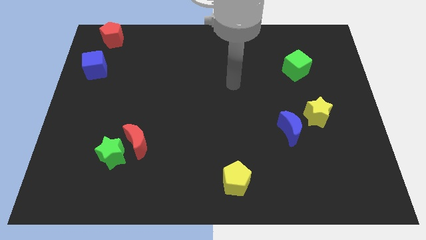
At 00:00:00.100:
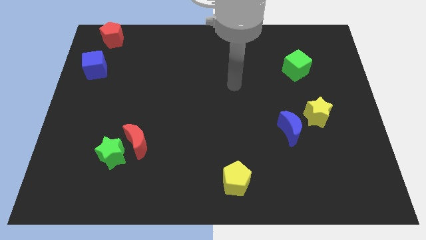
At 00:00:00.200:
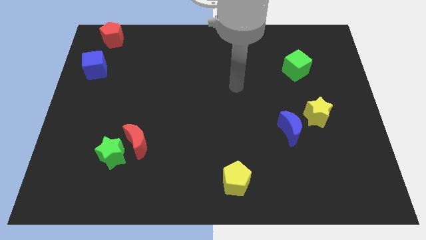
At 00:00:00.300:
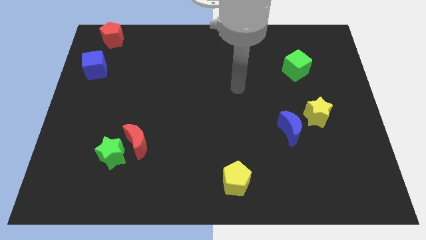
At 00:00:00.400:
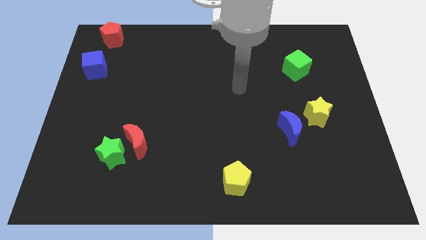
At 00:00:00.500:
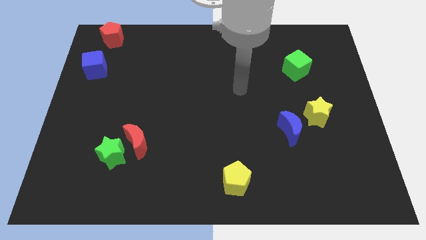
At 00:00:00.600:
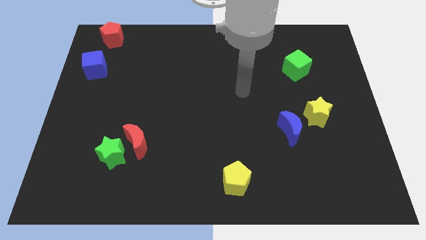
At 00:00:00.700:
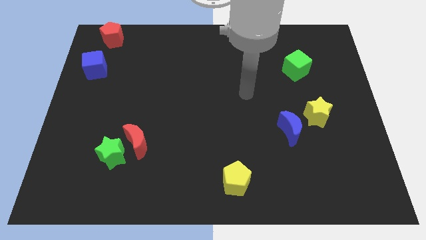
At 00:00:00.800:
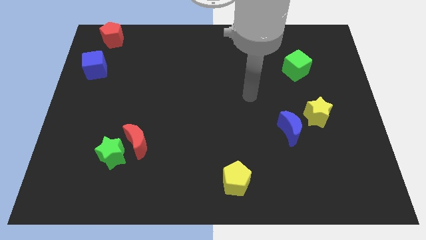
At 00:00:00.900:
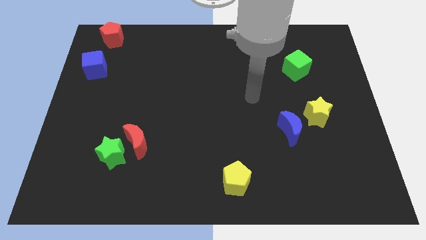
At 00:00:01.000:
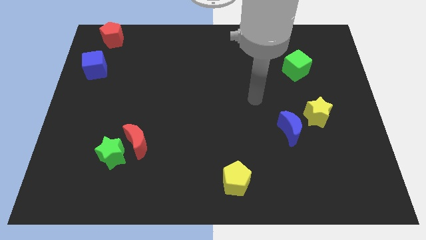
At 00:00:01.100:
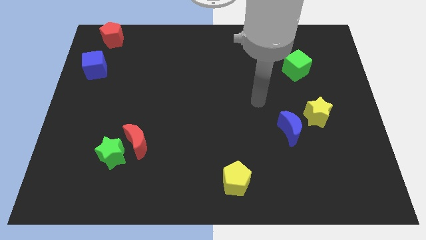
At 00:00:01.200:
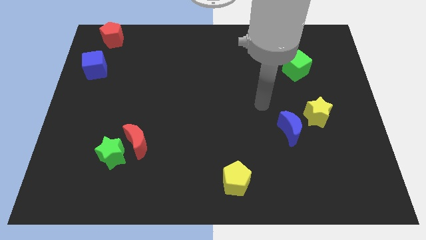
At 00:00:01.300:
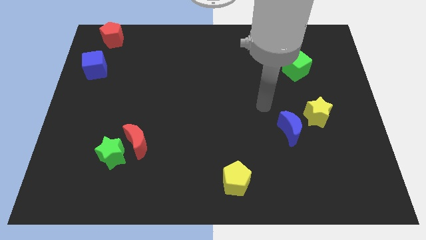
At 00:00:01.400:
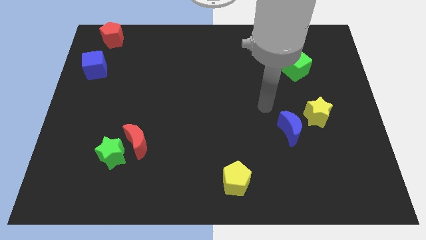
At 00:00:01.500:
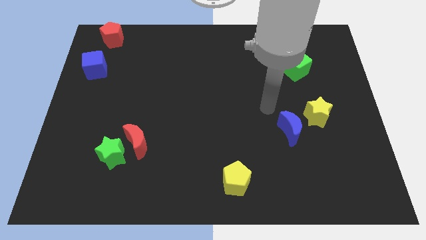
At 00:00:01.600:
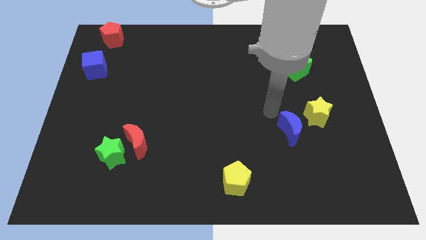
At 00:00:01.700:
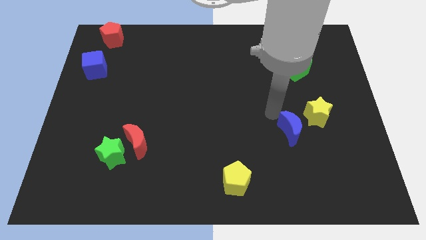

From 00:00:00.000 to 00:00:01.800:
move your arm to the top of the blue crescent

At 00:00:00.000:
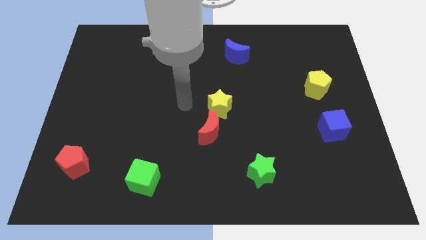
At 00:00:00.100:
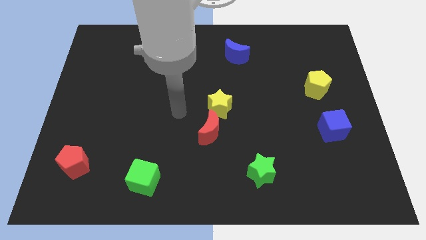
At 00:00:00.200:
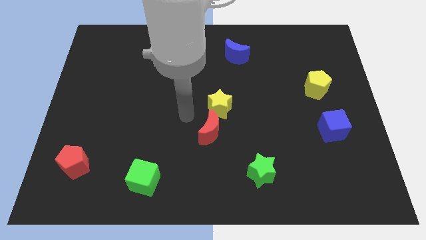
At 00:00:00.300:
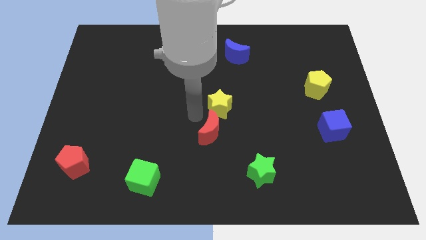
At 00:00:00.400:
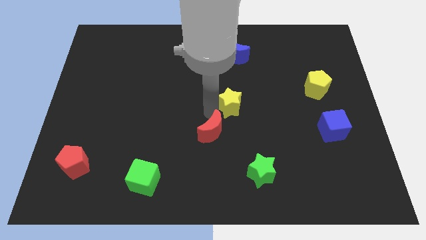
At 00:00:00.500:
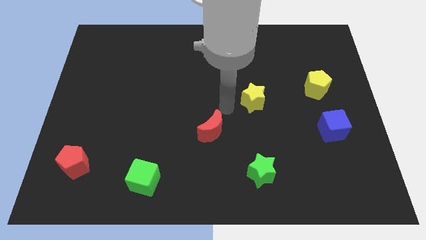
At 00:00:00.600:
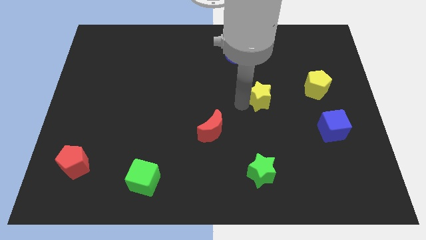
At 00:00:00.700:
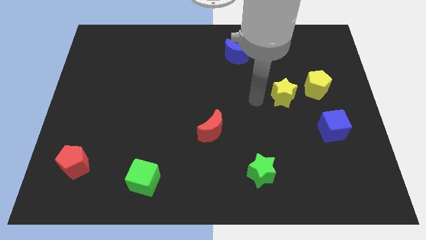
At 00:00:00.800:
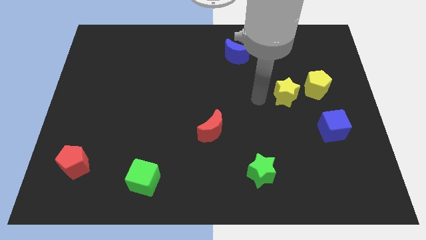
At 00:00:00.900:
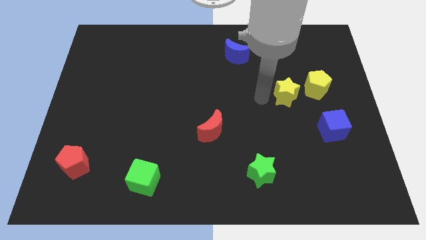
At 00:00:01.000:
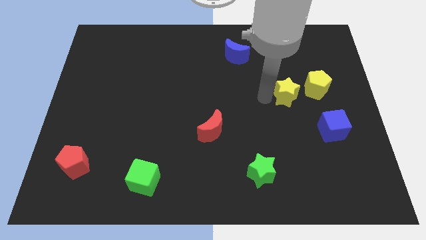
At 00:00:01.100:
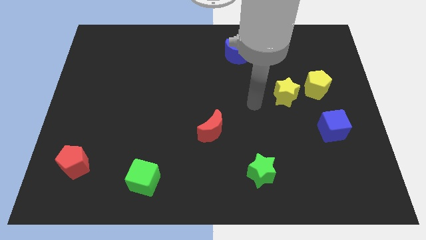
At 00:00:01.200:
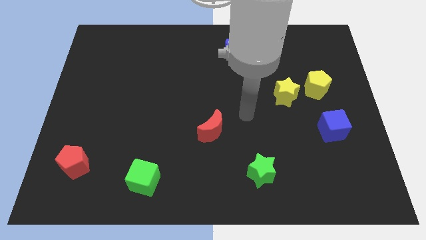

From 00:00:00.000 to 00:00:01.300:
move yellow star apart from red crescent

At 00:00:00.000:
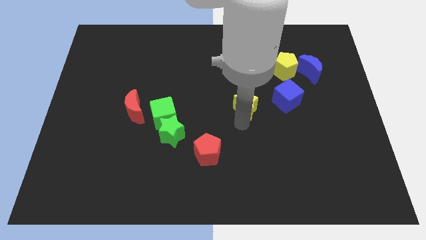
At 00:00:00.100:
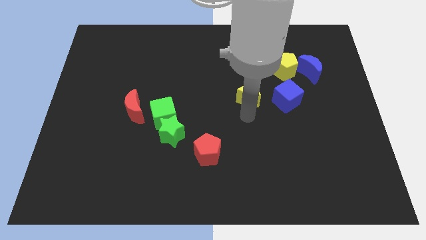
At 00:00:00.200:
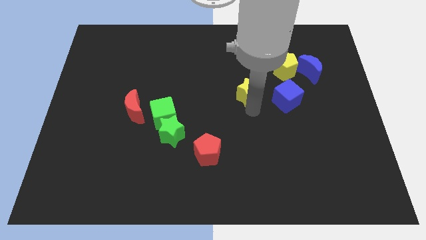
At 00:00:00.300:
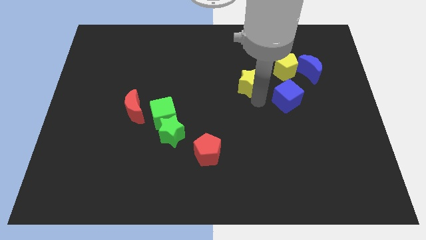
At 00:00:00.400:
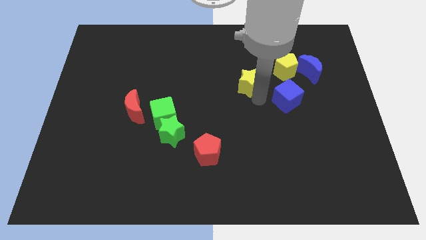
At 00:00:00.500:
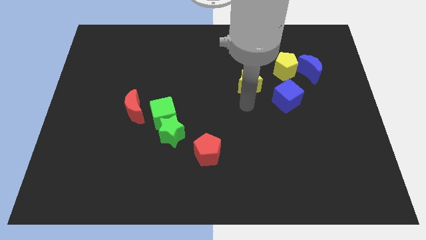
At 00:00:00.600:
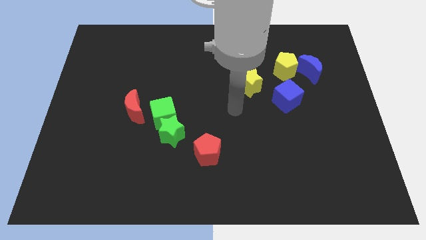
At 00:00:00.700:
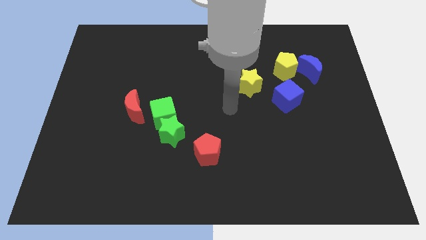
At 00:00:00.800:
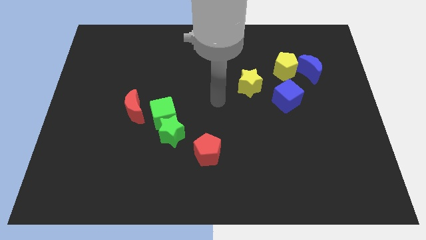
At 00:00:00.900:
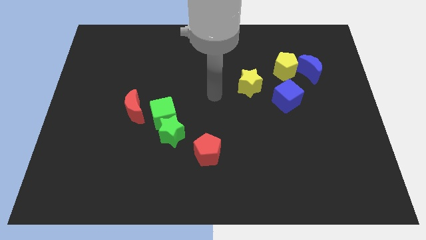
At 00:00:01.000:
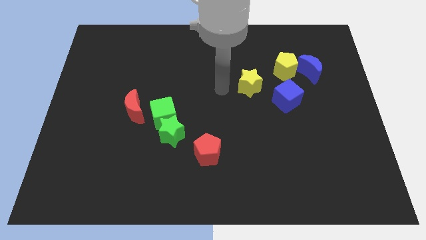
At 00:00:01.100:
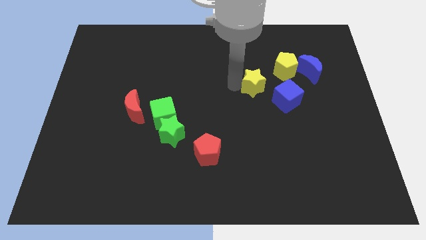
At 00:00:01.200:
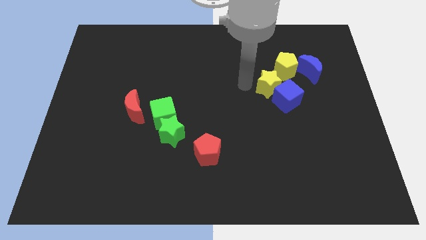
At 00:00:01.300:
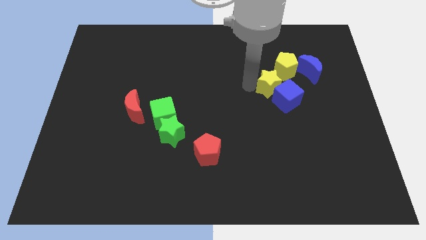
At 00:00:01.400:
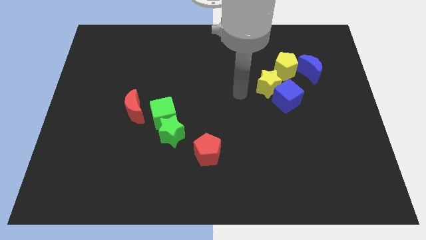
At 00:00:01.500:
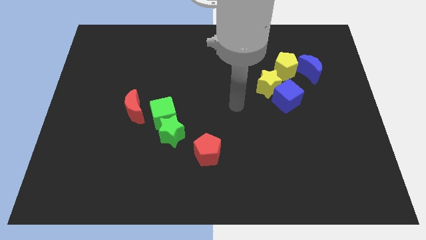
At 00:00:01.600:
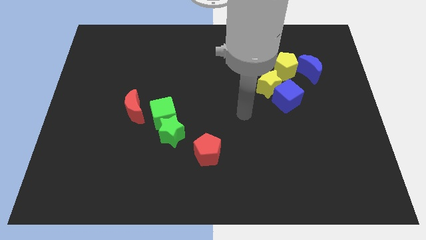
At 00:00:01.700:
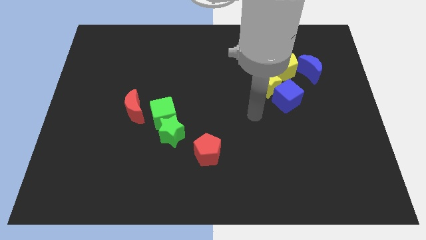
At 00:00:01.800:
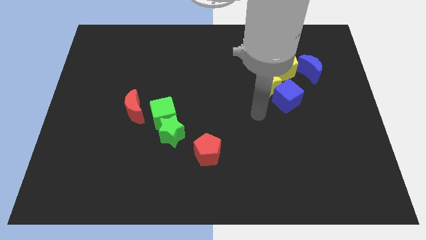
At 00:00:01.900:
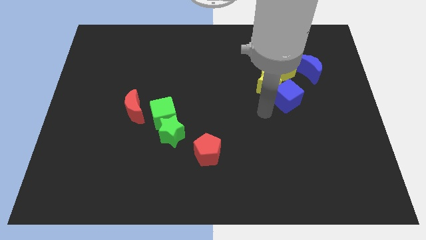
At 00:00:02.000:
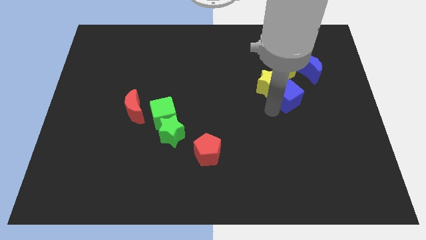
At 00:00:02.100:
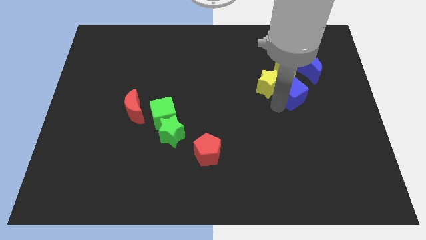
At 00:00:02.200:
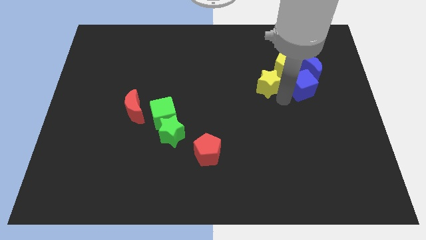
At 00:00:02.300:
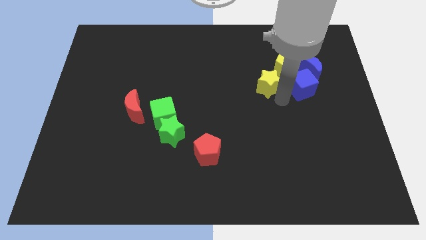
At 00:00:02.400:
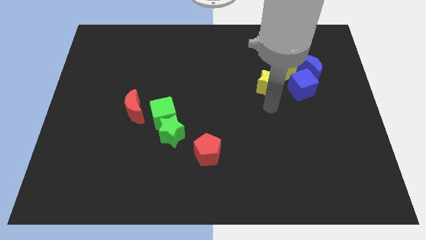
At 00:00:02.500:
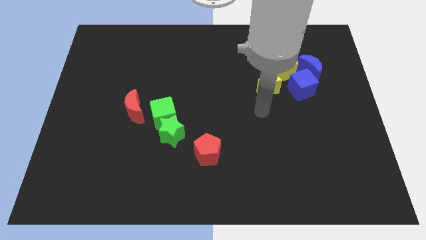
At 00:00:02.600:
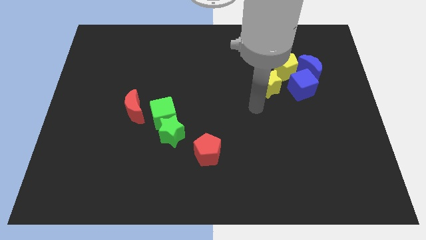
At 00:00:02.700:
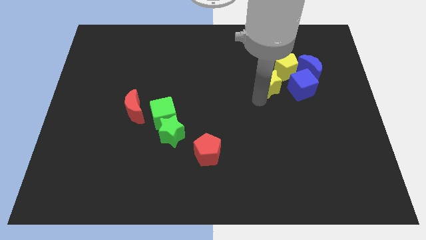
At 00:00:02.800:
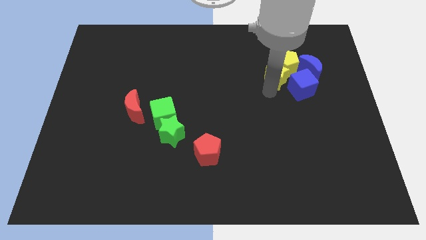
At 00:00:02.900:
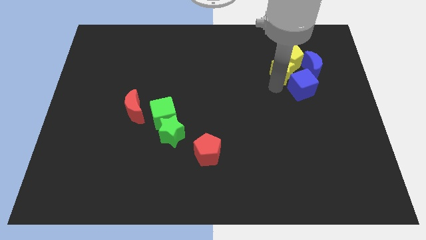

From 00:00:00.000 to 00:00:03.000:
move green star blue cube to the group of blocks

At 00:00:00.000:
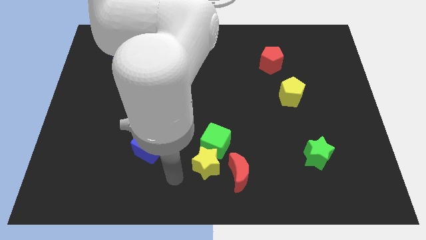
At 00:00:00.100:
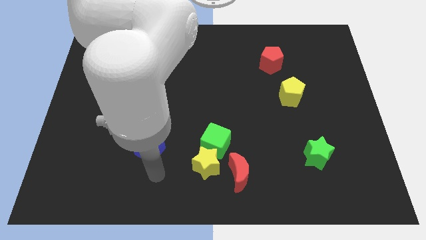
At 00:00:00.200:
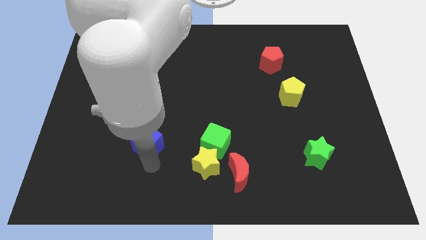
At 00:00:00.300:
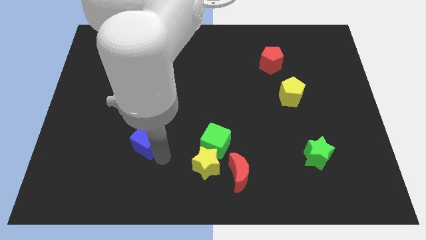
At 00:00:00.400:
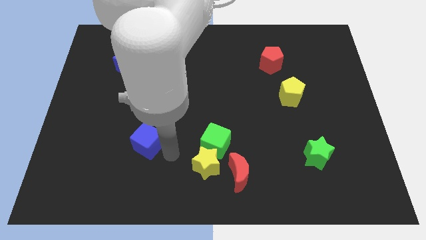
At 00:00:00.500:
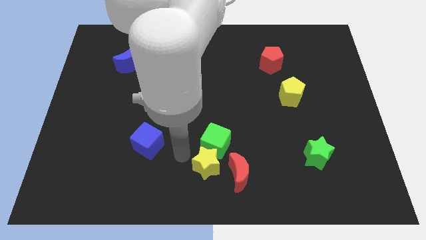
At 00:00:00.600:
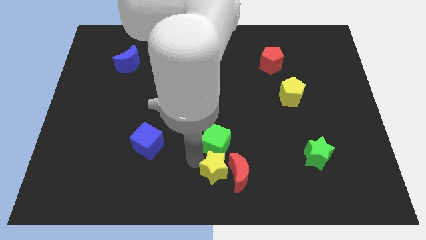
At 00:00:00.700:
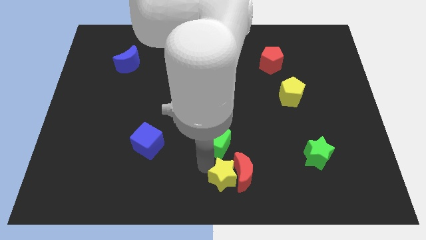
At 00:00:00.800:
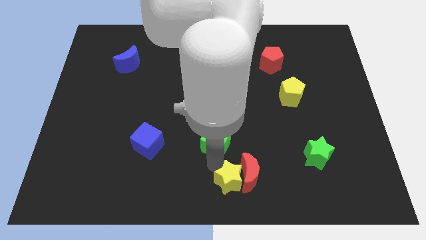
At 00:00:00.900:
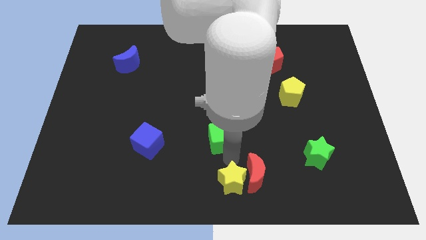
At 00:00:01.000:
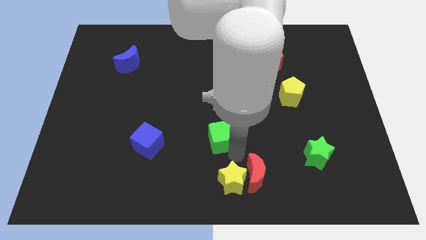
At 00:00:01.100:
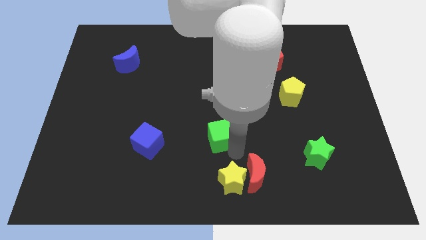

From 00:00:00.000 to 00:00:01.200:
push yellow star in to red moon

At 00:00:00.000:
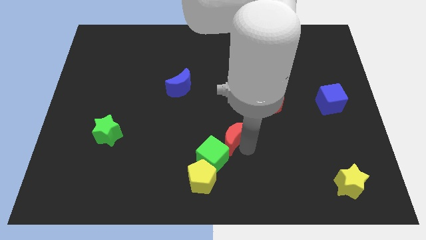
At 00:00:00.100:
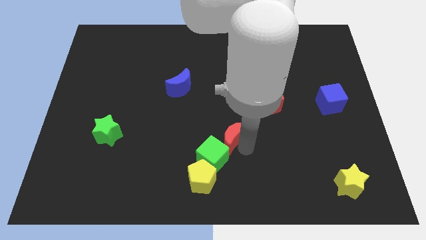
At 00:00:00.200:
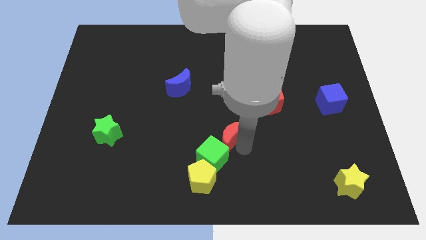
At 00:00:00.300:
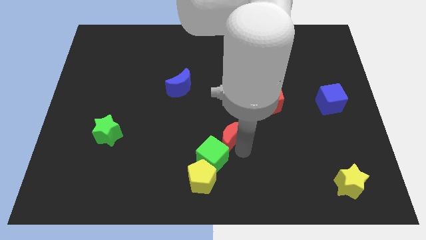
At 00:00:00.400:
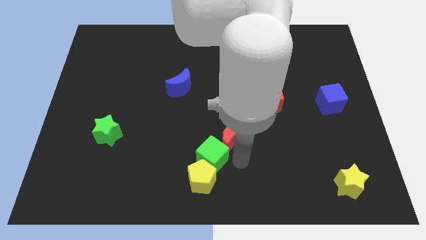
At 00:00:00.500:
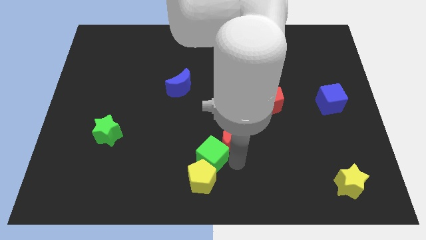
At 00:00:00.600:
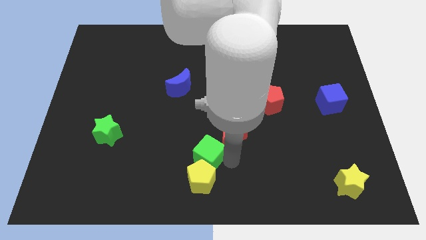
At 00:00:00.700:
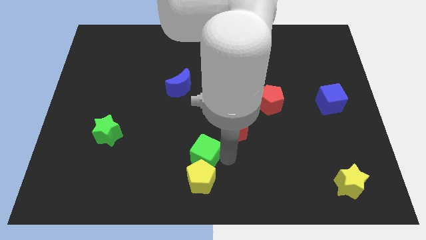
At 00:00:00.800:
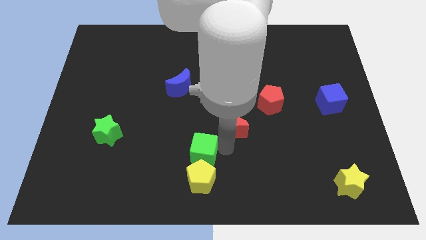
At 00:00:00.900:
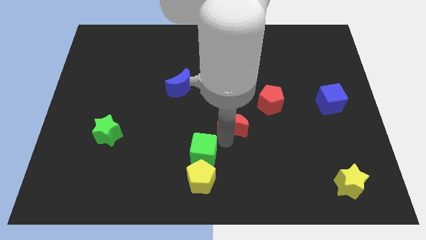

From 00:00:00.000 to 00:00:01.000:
move red crescent towards the red pentagon

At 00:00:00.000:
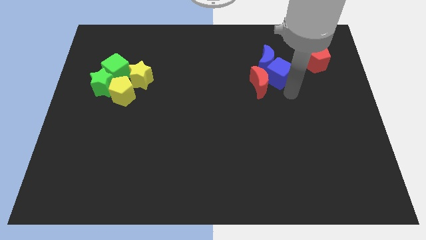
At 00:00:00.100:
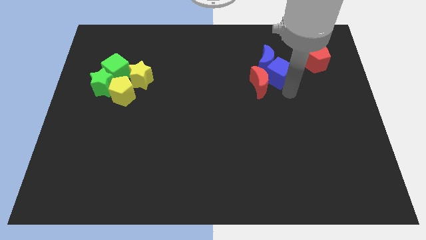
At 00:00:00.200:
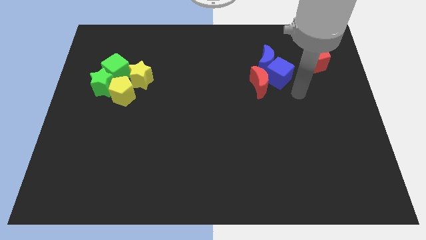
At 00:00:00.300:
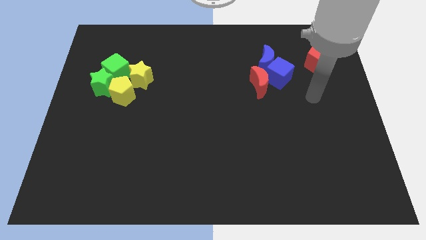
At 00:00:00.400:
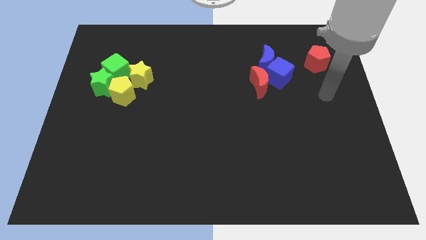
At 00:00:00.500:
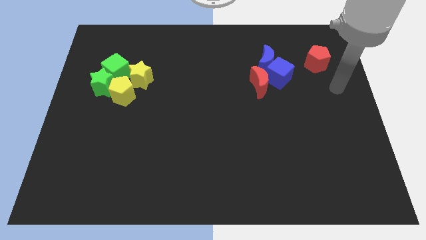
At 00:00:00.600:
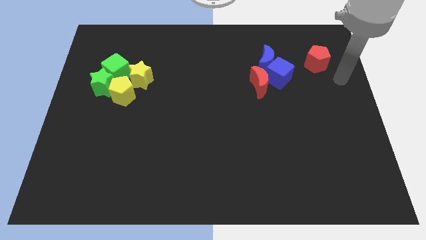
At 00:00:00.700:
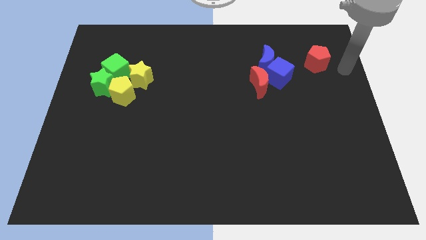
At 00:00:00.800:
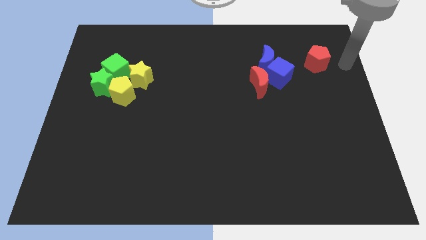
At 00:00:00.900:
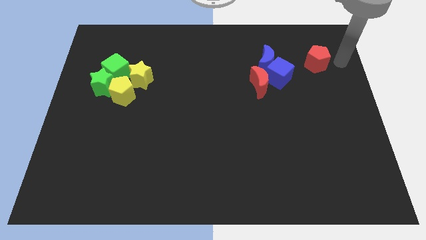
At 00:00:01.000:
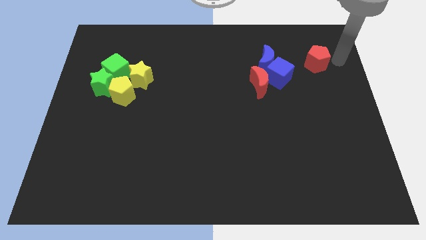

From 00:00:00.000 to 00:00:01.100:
place your arm to the right of the red pentagon
